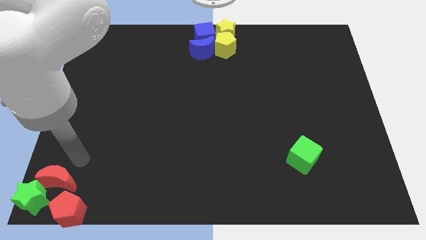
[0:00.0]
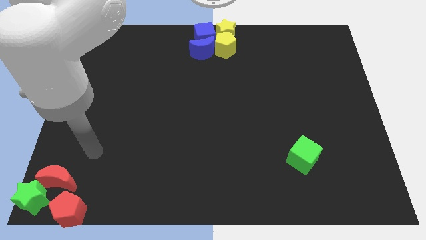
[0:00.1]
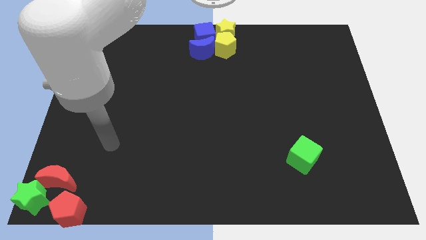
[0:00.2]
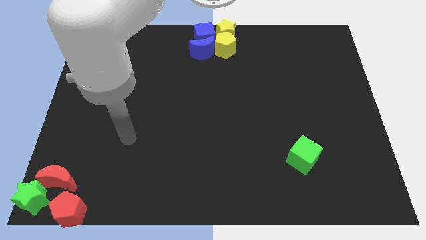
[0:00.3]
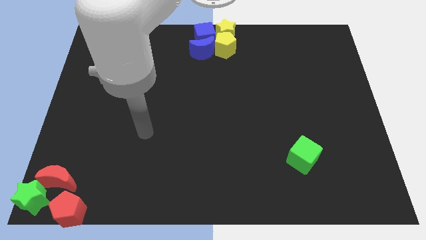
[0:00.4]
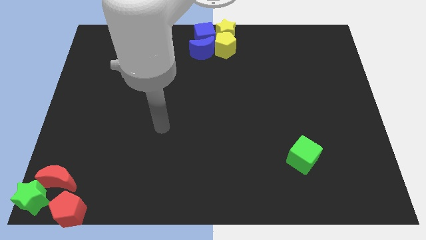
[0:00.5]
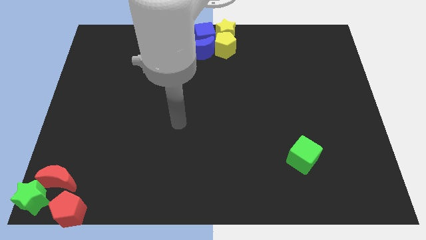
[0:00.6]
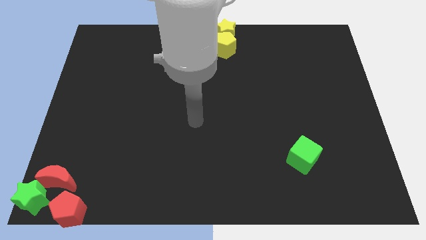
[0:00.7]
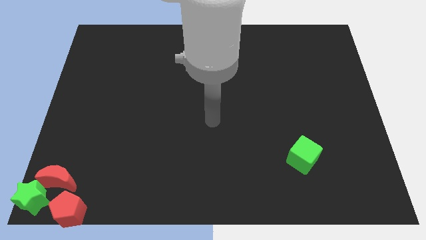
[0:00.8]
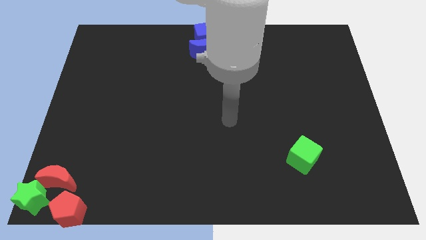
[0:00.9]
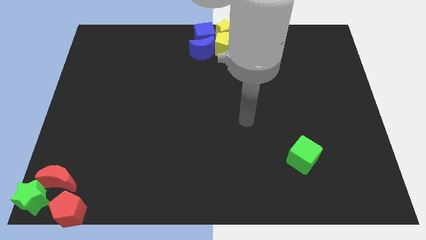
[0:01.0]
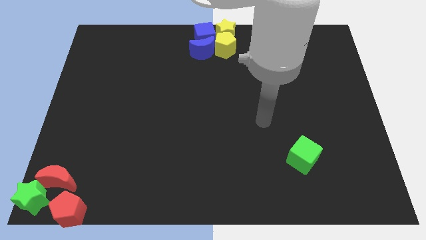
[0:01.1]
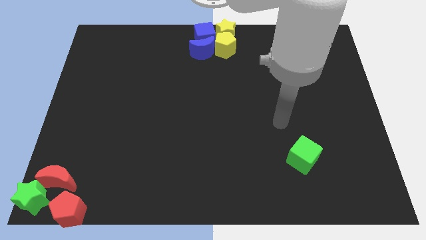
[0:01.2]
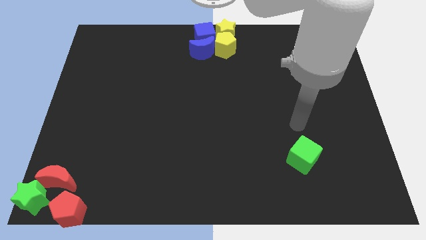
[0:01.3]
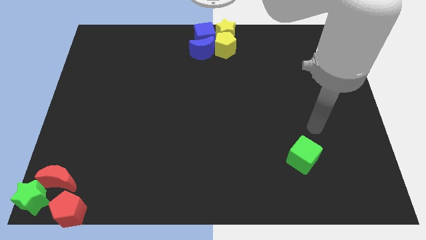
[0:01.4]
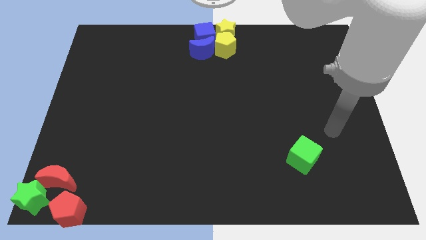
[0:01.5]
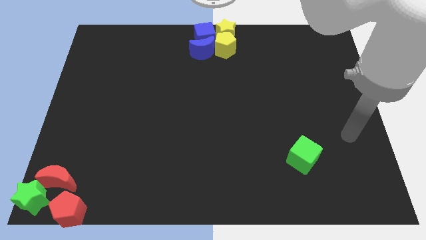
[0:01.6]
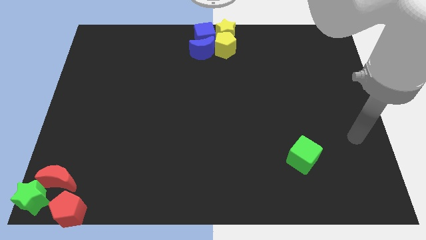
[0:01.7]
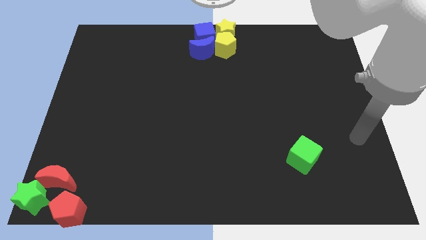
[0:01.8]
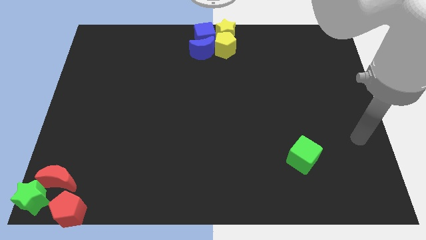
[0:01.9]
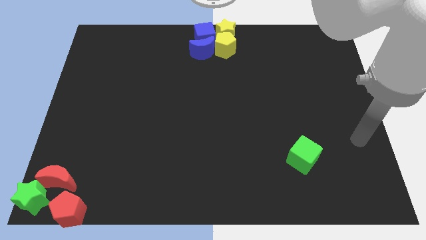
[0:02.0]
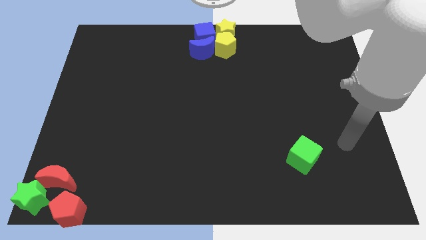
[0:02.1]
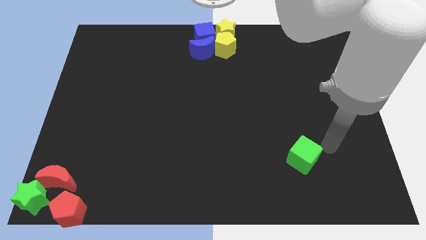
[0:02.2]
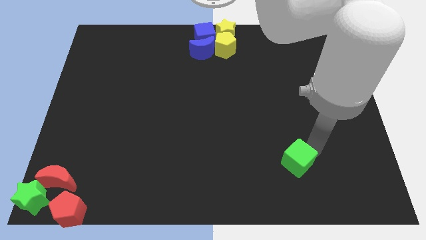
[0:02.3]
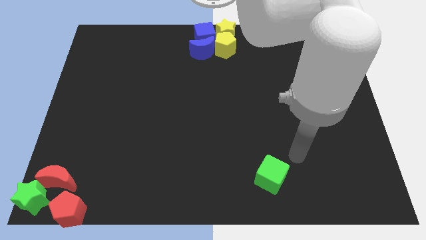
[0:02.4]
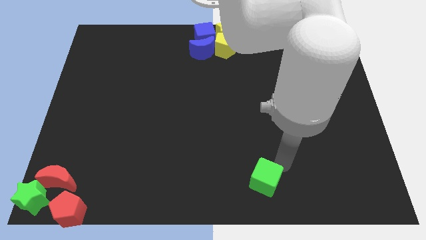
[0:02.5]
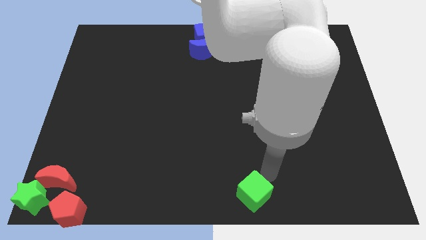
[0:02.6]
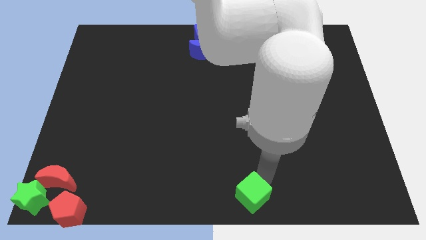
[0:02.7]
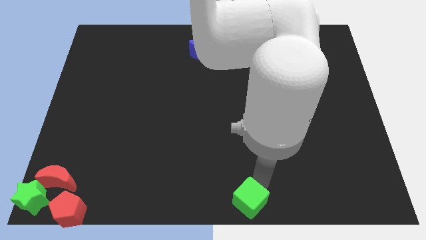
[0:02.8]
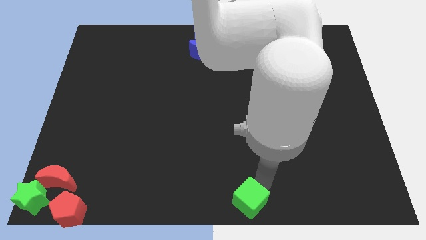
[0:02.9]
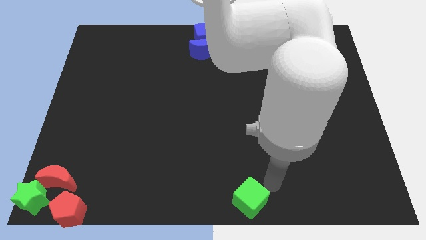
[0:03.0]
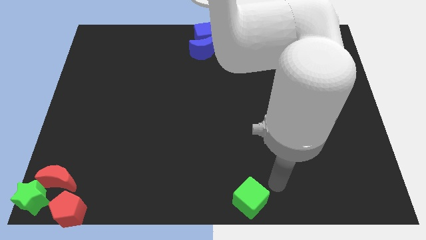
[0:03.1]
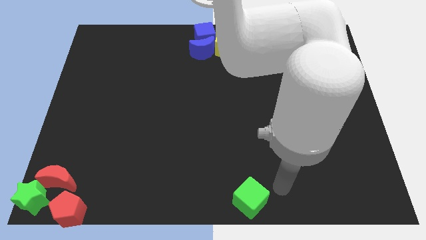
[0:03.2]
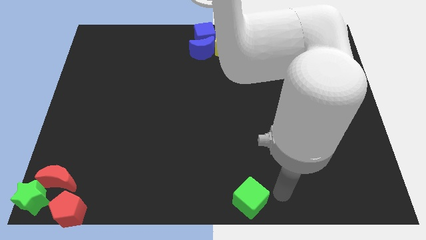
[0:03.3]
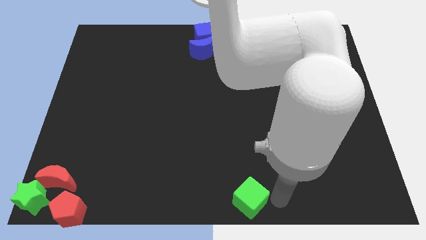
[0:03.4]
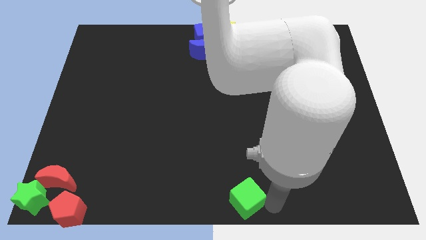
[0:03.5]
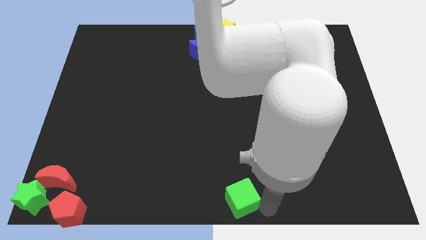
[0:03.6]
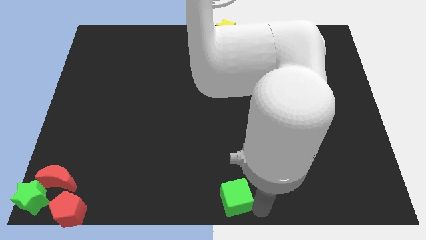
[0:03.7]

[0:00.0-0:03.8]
move the green cube to the bottom center of the board

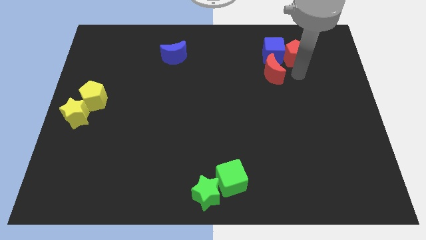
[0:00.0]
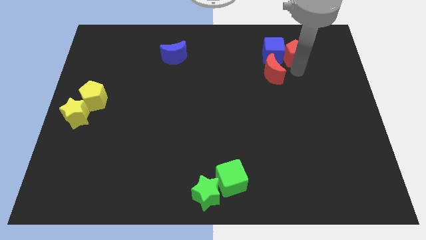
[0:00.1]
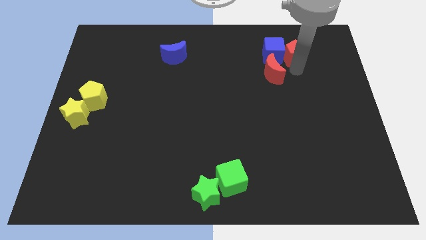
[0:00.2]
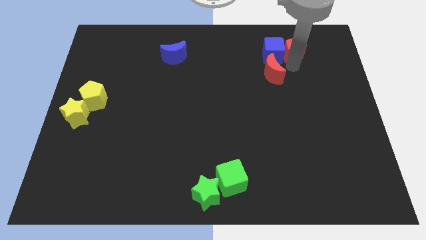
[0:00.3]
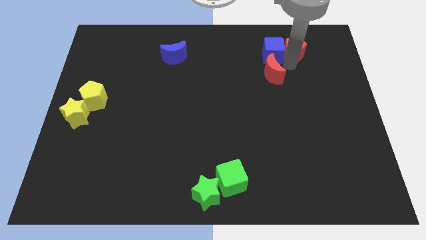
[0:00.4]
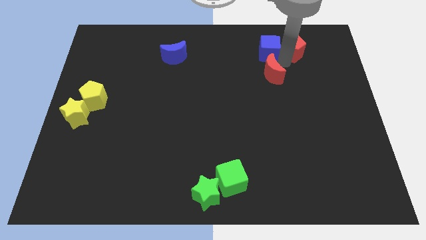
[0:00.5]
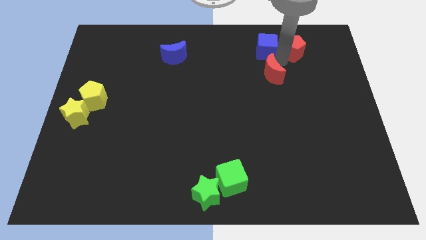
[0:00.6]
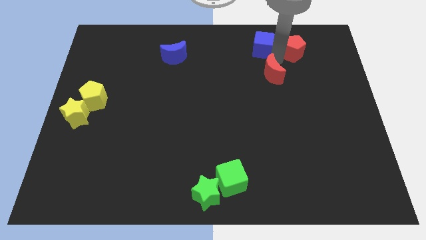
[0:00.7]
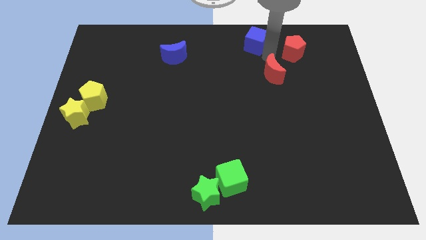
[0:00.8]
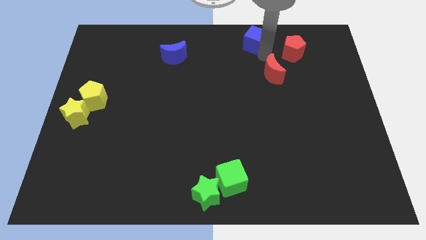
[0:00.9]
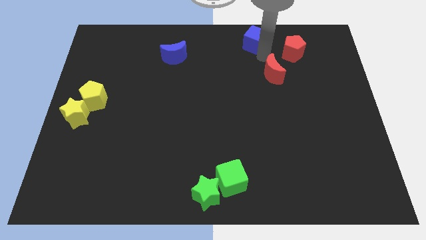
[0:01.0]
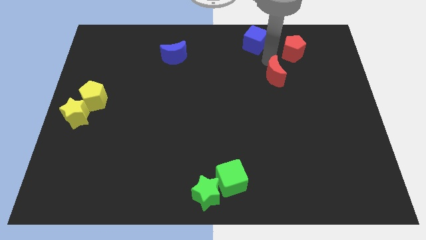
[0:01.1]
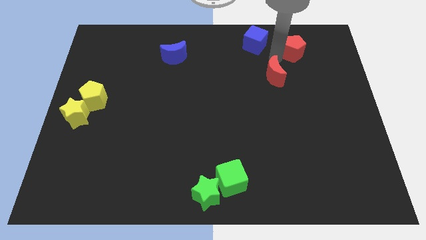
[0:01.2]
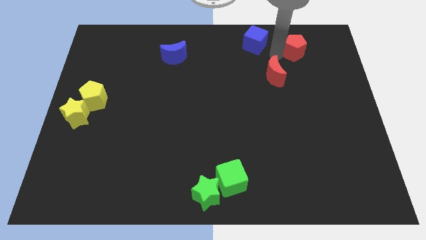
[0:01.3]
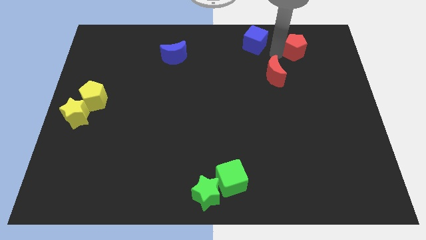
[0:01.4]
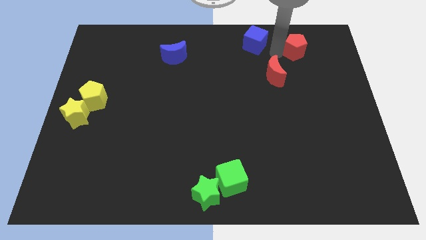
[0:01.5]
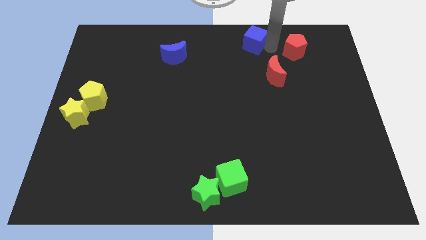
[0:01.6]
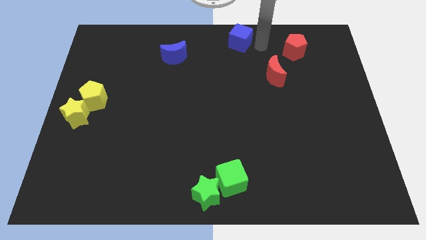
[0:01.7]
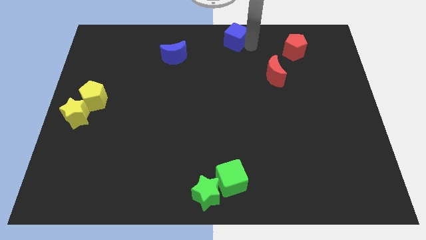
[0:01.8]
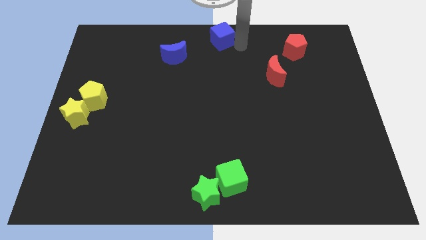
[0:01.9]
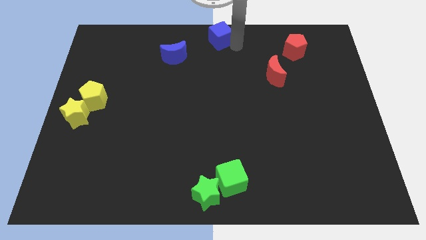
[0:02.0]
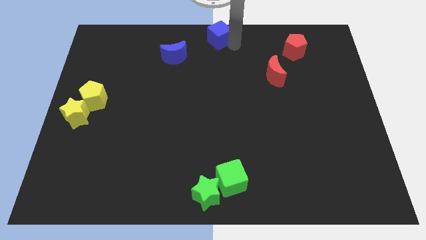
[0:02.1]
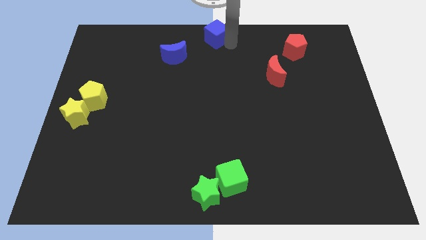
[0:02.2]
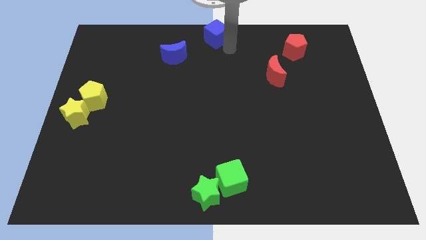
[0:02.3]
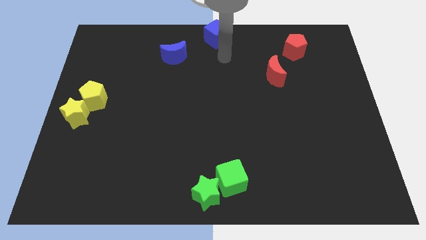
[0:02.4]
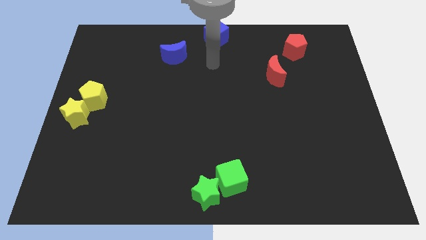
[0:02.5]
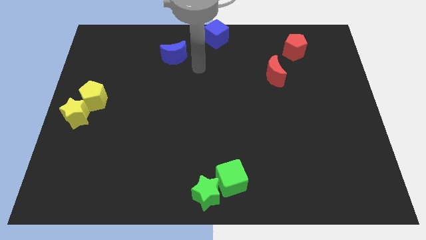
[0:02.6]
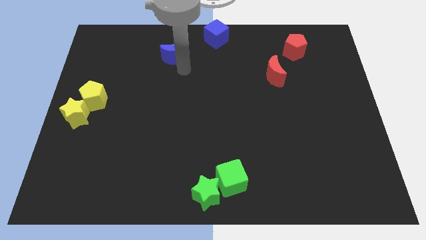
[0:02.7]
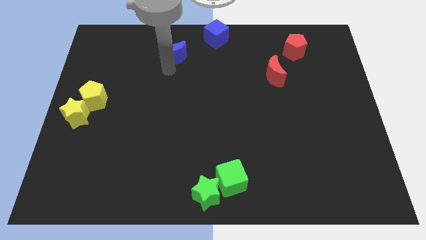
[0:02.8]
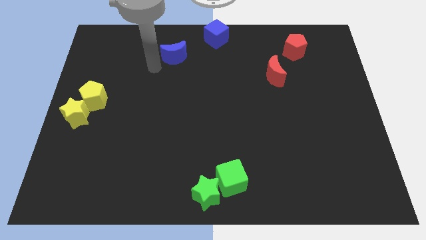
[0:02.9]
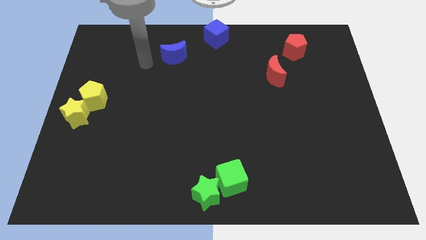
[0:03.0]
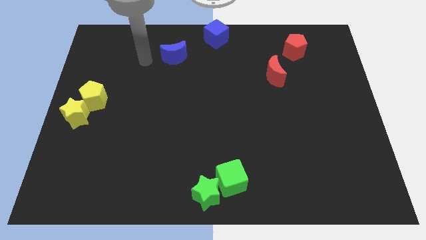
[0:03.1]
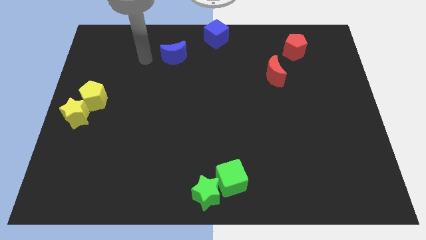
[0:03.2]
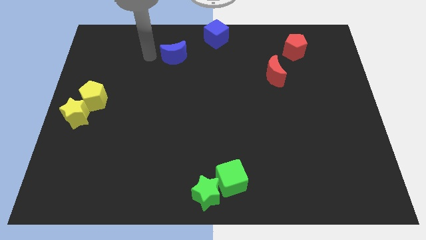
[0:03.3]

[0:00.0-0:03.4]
separate the blue cube from both the red pentagon and the red moon

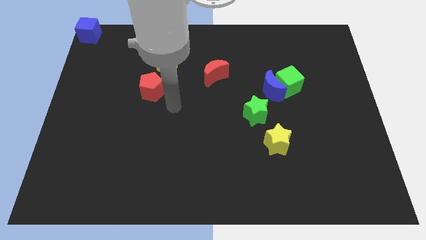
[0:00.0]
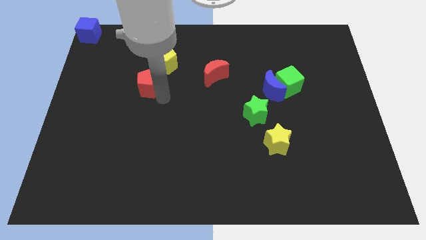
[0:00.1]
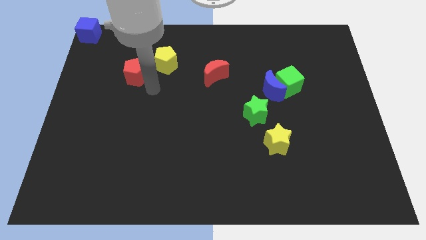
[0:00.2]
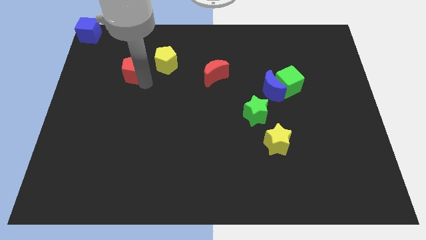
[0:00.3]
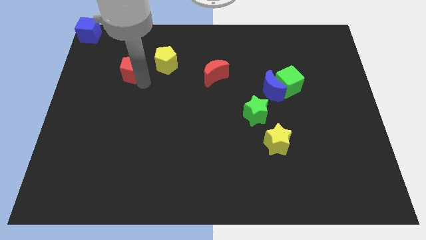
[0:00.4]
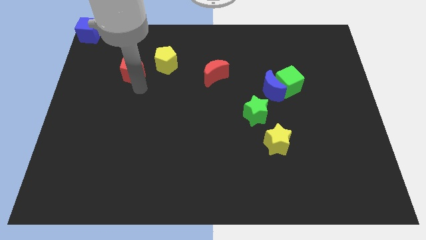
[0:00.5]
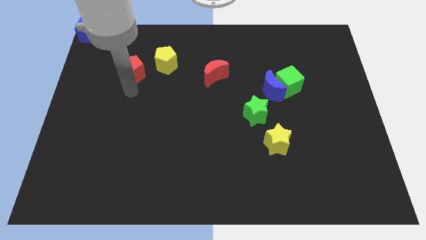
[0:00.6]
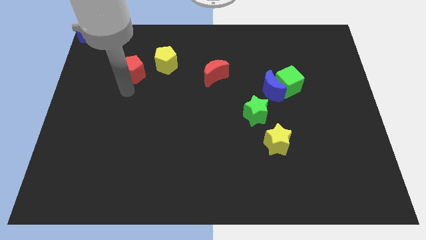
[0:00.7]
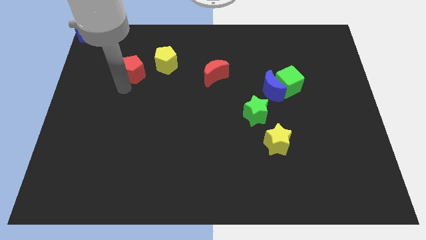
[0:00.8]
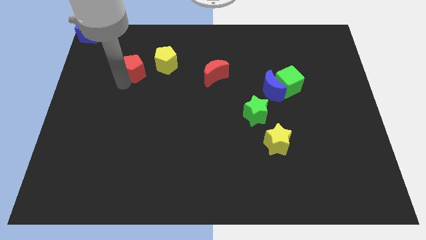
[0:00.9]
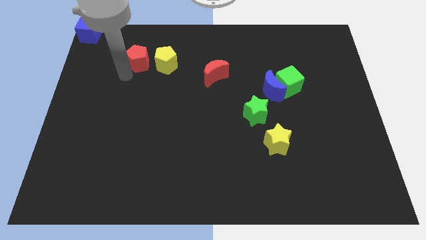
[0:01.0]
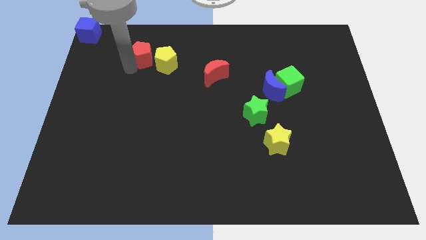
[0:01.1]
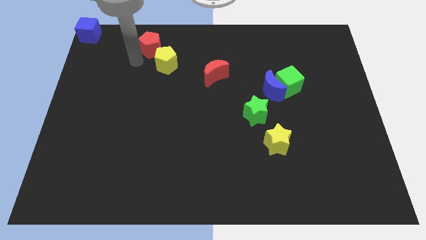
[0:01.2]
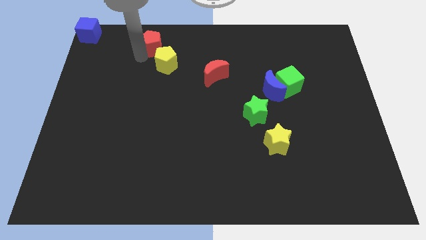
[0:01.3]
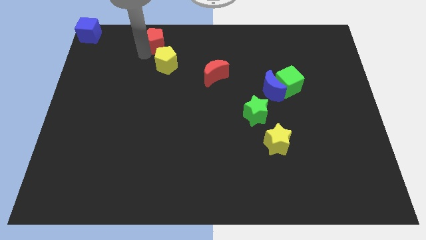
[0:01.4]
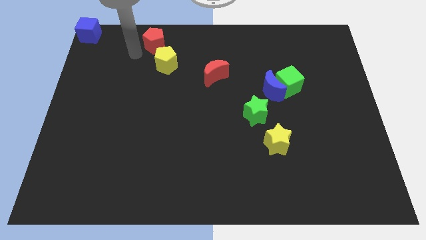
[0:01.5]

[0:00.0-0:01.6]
push the red pentagon to the top of yellow pentagon
